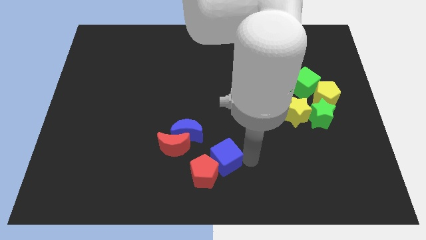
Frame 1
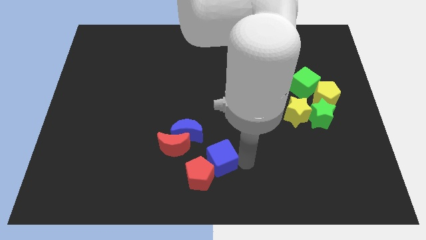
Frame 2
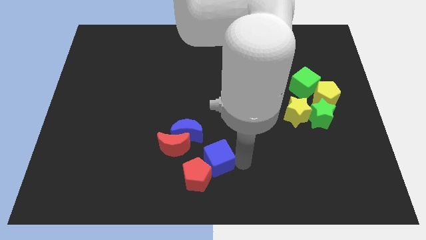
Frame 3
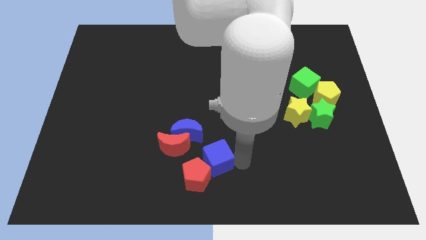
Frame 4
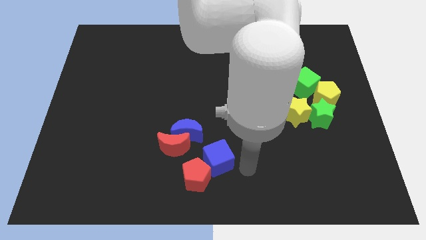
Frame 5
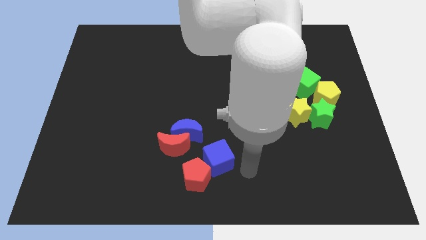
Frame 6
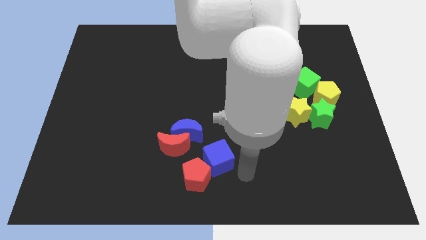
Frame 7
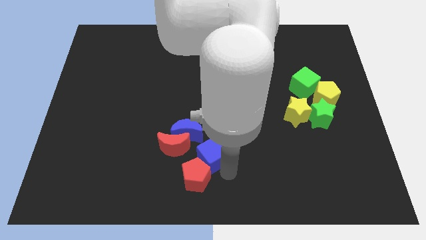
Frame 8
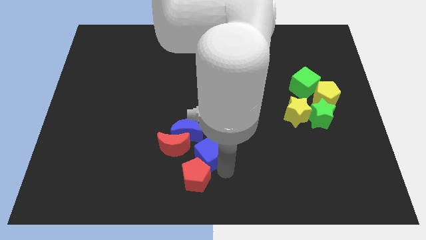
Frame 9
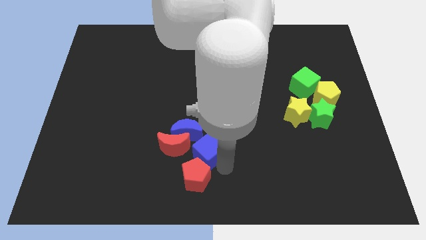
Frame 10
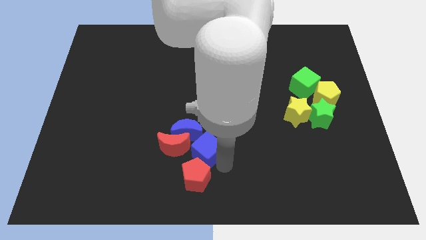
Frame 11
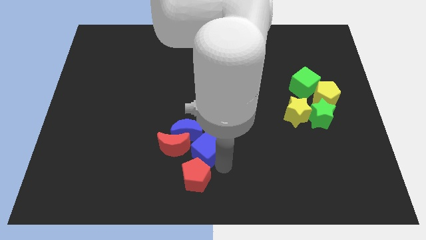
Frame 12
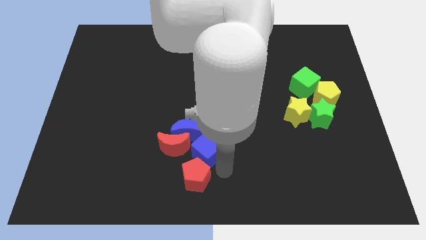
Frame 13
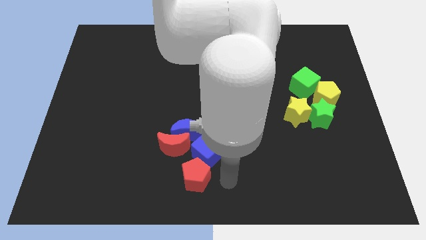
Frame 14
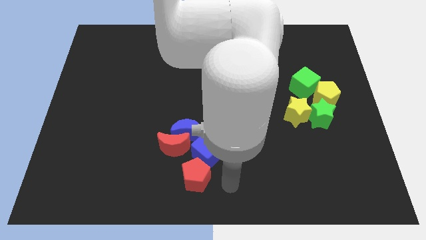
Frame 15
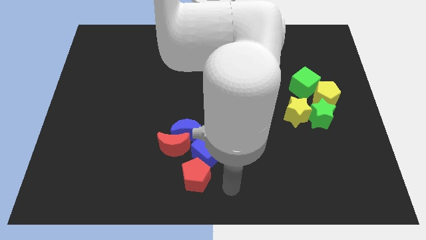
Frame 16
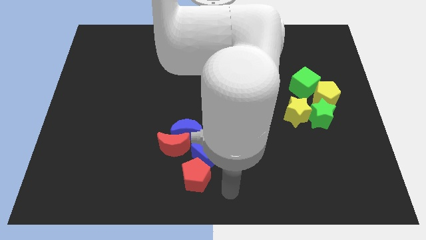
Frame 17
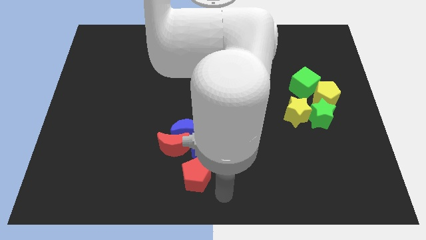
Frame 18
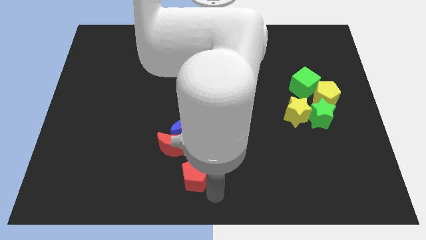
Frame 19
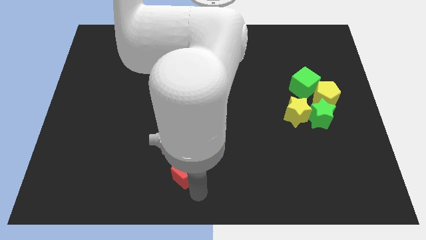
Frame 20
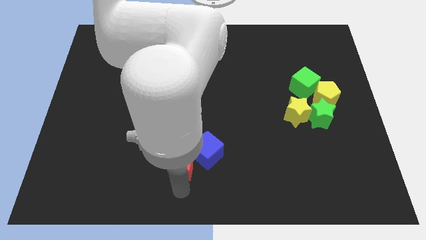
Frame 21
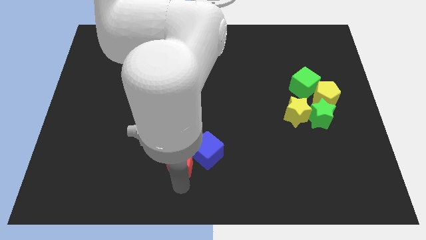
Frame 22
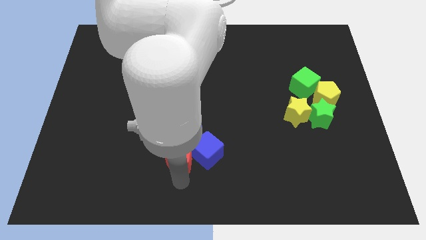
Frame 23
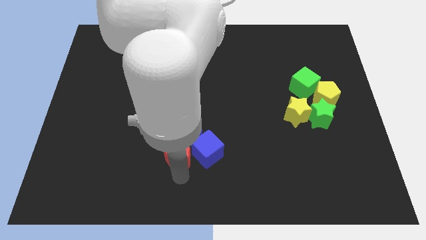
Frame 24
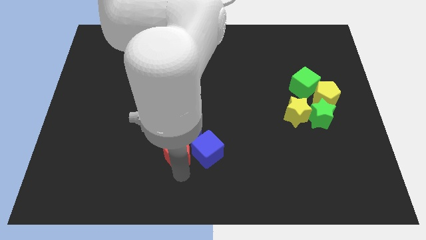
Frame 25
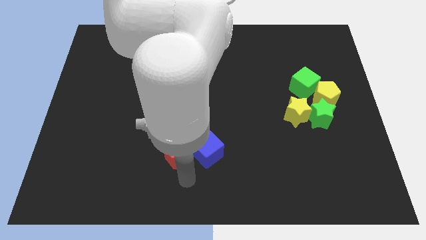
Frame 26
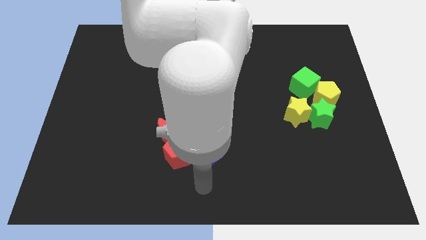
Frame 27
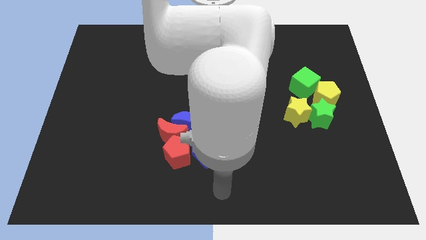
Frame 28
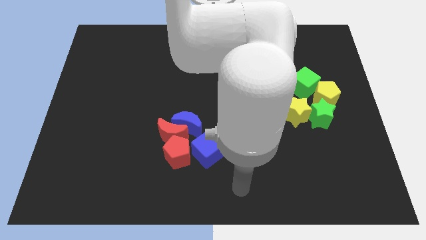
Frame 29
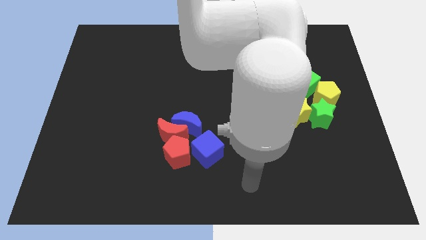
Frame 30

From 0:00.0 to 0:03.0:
push the blue cube and red pentagon to the bottom of the red crescent

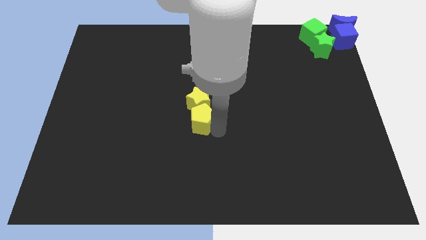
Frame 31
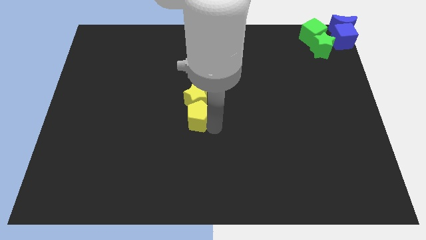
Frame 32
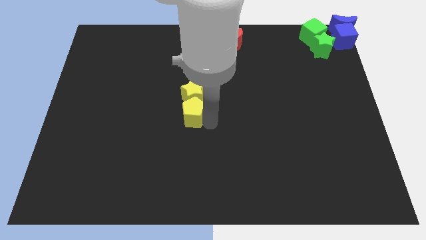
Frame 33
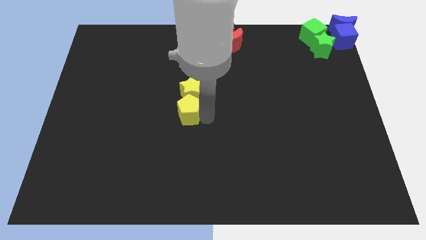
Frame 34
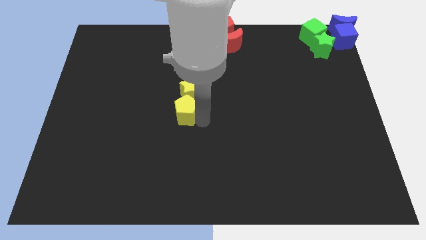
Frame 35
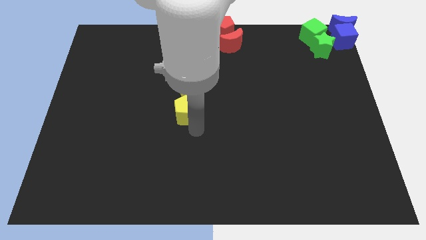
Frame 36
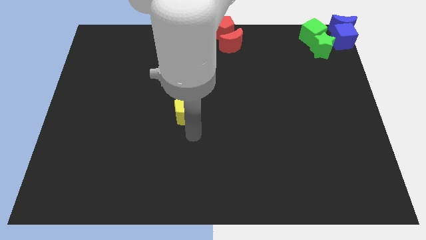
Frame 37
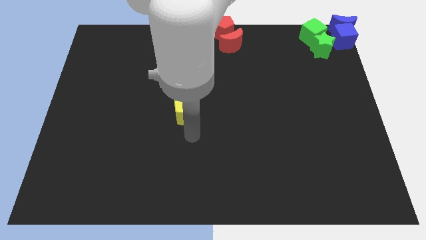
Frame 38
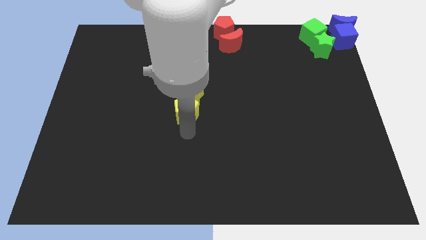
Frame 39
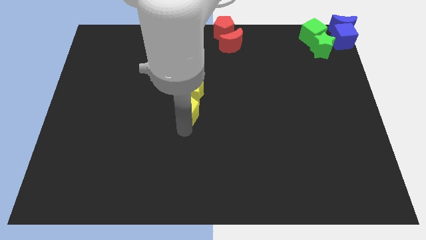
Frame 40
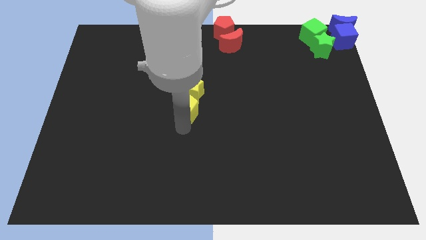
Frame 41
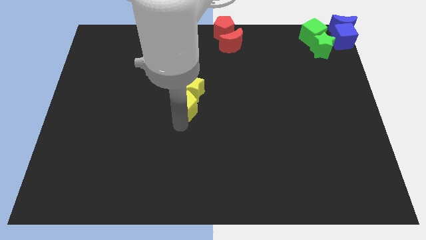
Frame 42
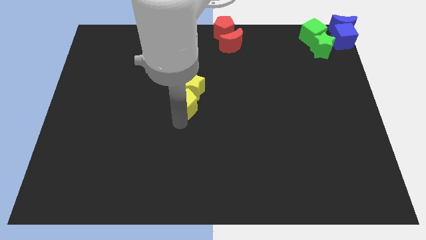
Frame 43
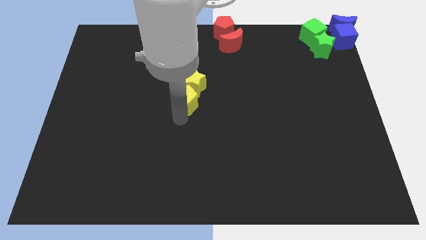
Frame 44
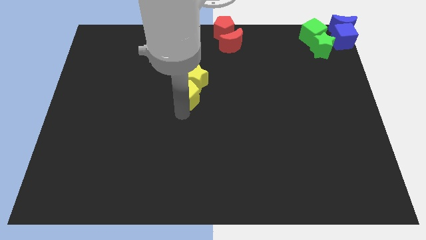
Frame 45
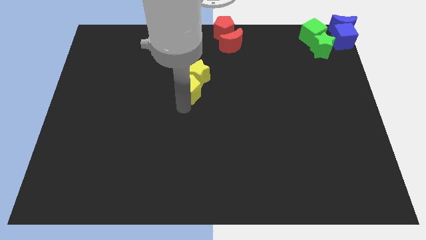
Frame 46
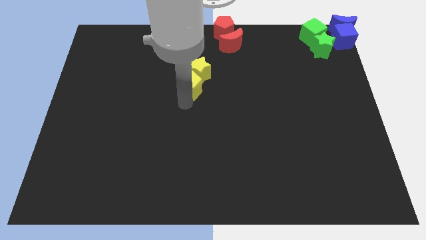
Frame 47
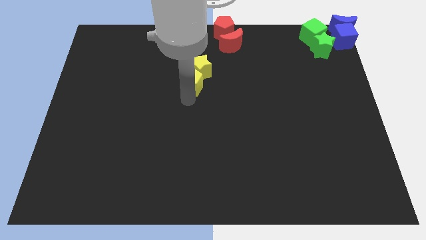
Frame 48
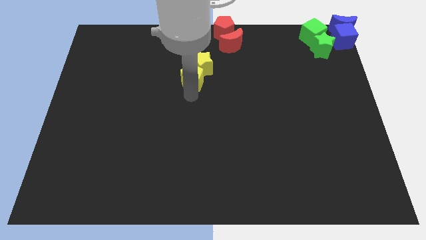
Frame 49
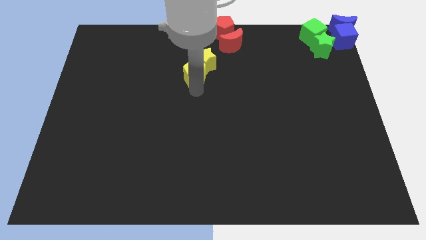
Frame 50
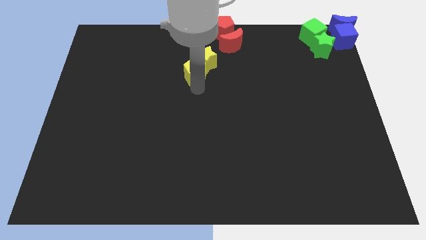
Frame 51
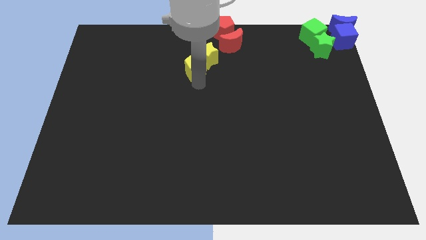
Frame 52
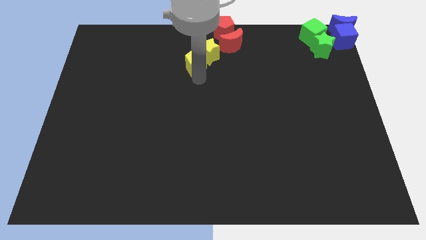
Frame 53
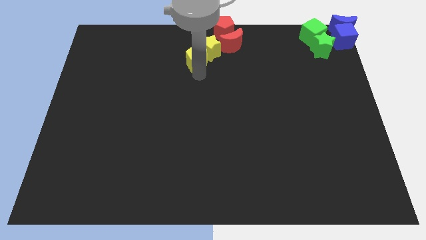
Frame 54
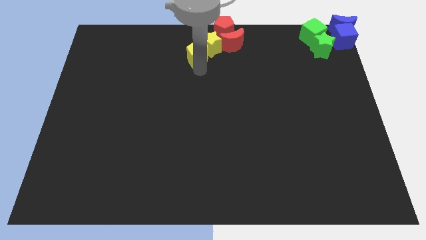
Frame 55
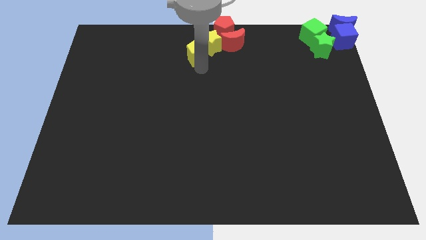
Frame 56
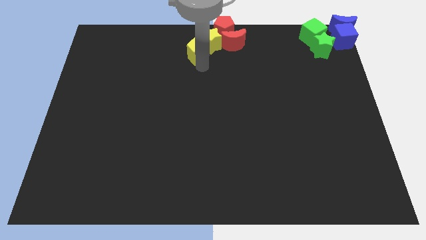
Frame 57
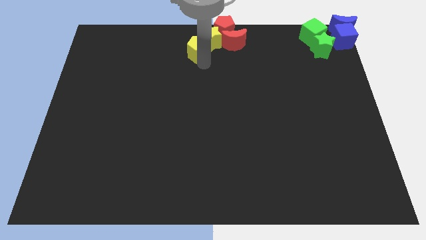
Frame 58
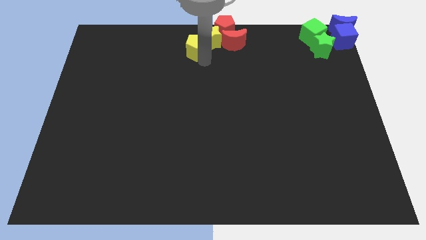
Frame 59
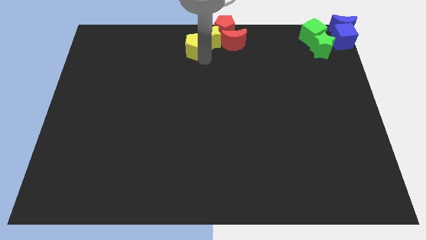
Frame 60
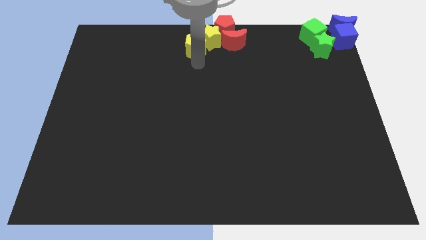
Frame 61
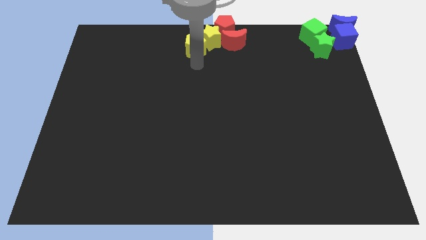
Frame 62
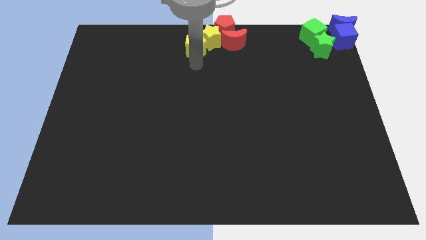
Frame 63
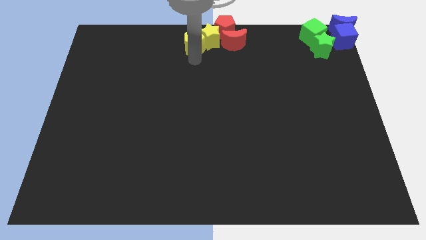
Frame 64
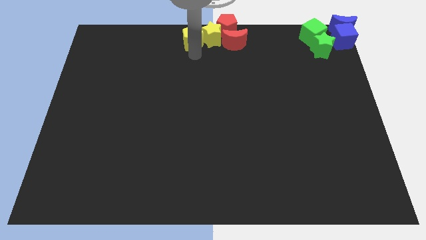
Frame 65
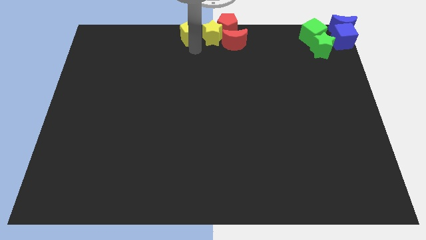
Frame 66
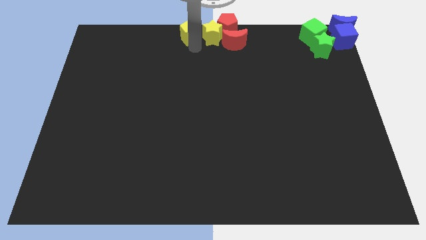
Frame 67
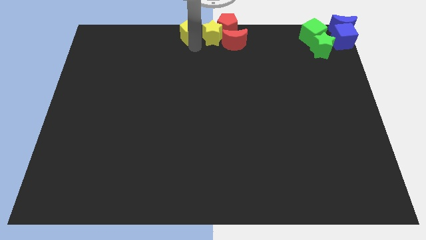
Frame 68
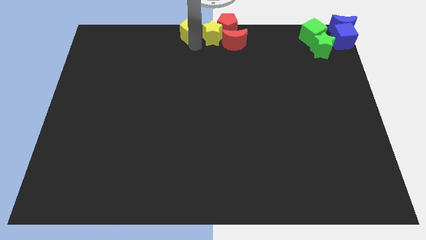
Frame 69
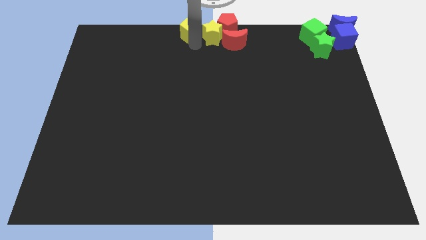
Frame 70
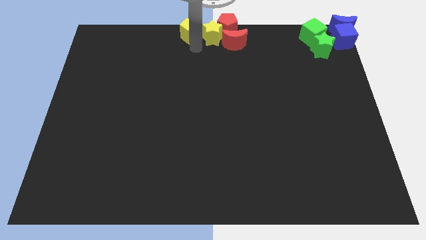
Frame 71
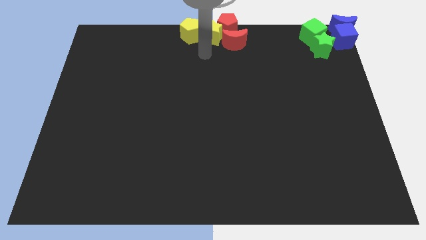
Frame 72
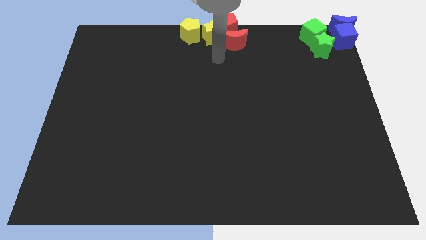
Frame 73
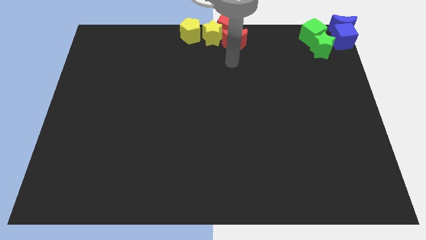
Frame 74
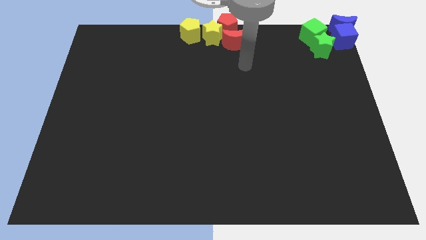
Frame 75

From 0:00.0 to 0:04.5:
place the yellow blocks at the top center of the board

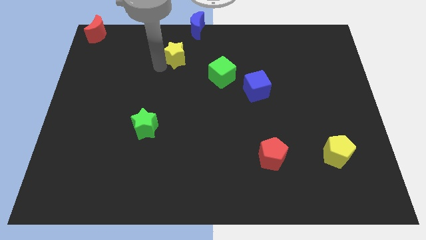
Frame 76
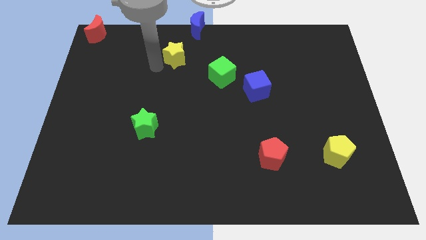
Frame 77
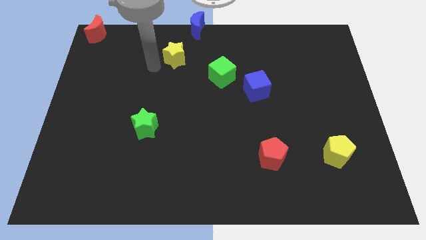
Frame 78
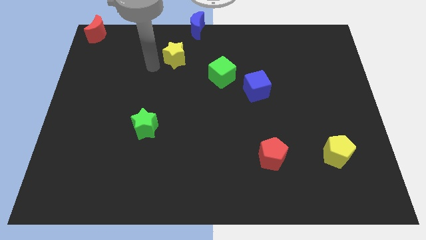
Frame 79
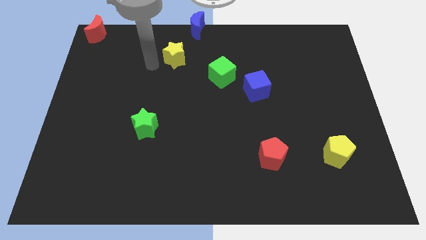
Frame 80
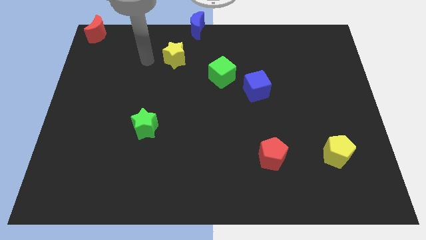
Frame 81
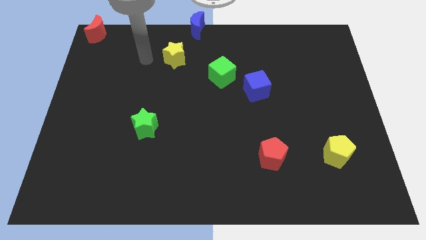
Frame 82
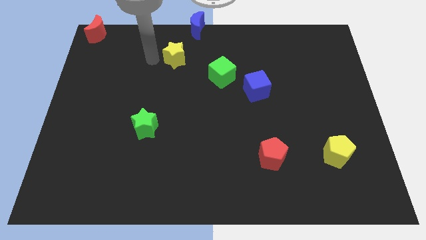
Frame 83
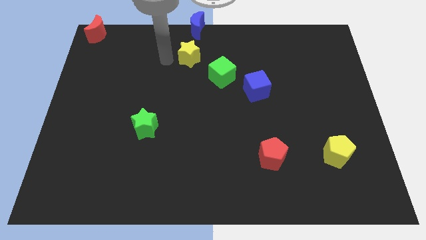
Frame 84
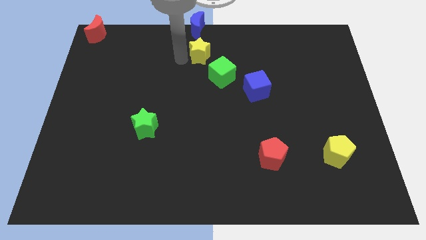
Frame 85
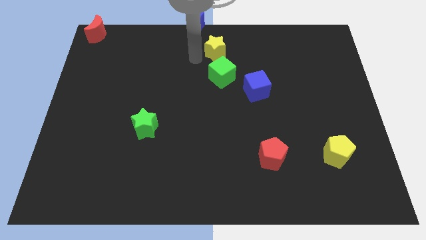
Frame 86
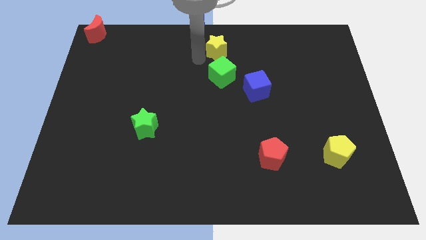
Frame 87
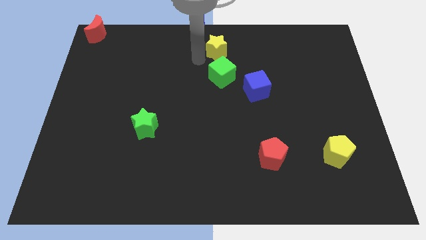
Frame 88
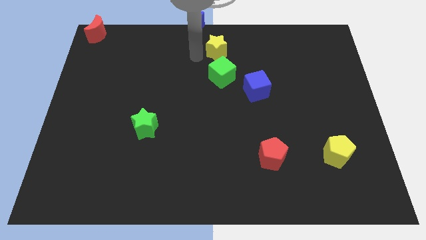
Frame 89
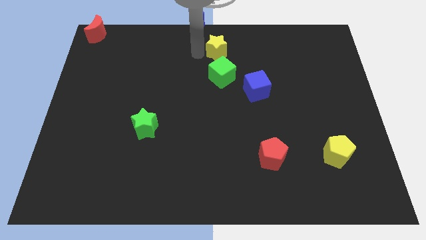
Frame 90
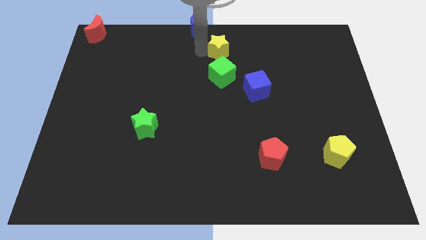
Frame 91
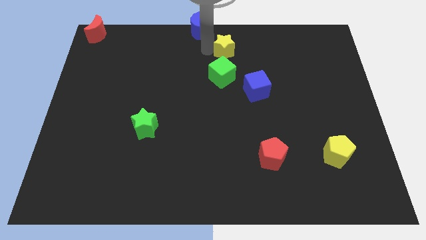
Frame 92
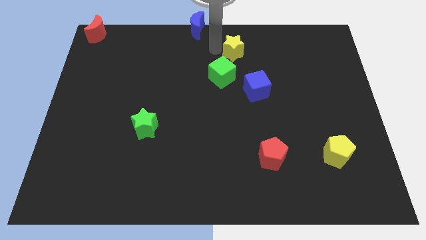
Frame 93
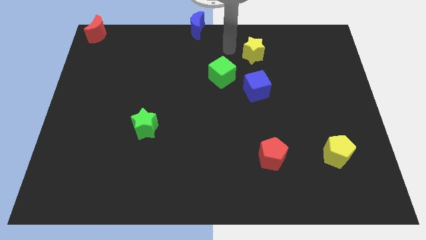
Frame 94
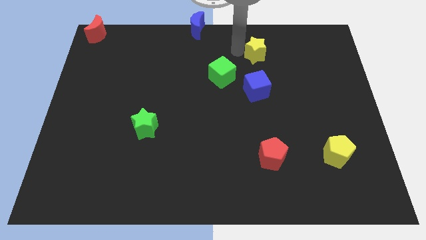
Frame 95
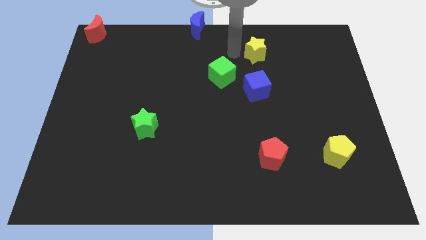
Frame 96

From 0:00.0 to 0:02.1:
slide yellow star above the blue cube
